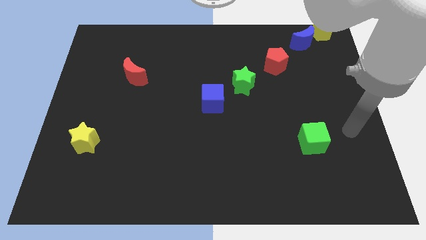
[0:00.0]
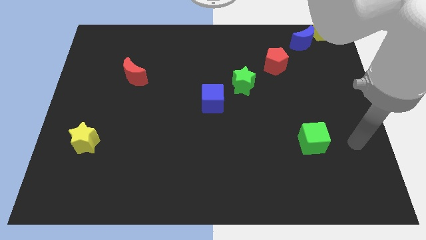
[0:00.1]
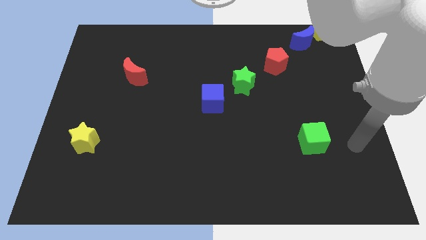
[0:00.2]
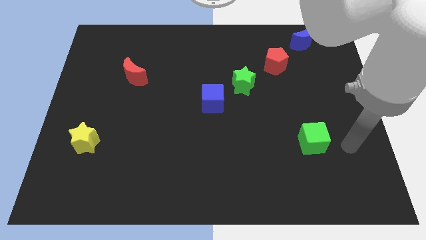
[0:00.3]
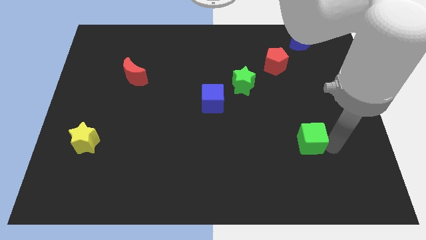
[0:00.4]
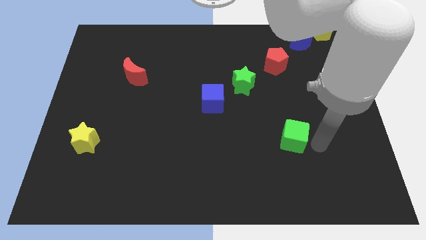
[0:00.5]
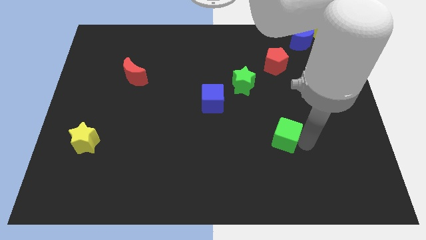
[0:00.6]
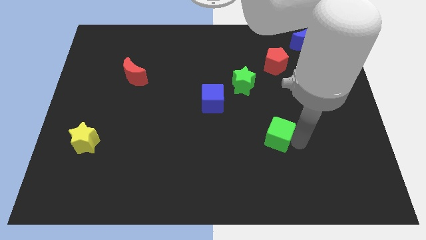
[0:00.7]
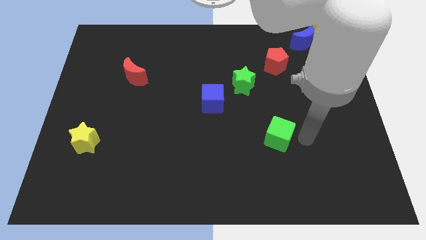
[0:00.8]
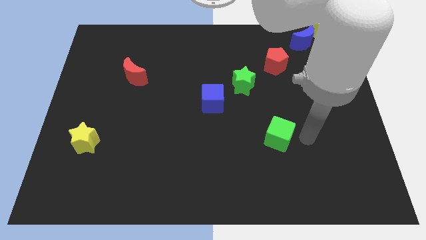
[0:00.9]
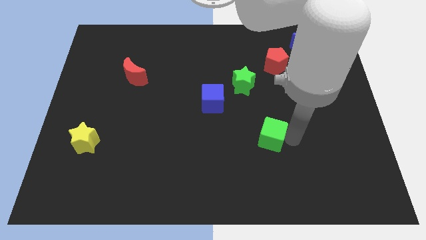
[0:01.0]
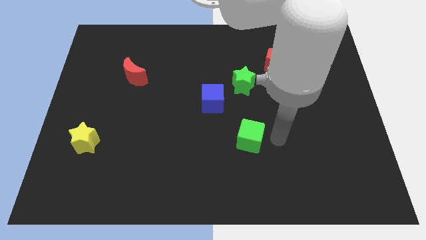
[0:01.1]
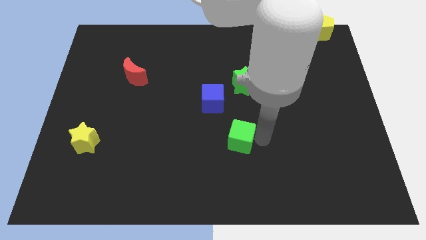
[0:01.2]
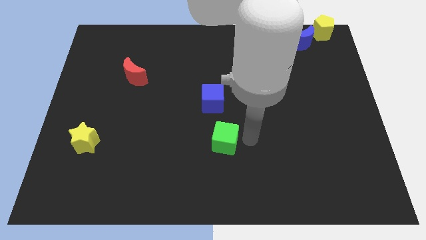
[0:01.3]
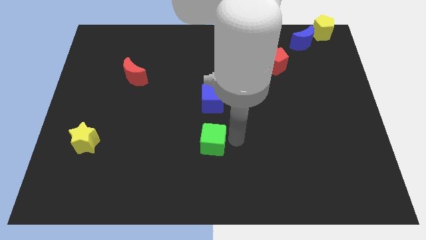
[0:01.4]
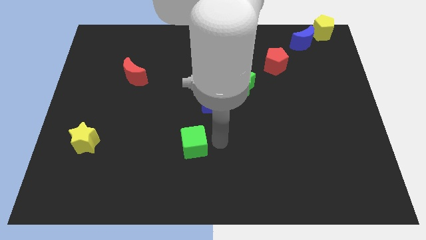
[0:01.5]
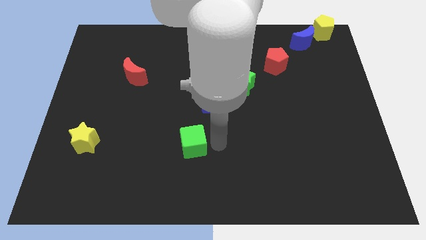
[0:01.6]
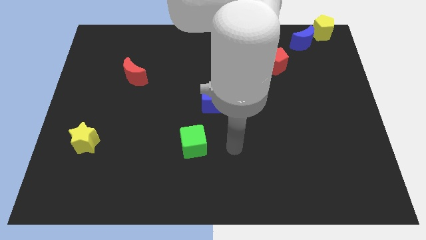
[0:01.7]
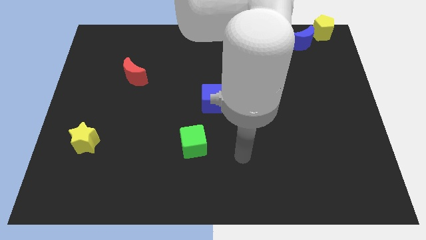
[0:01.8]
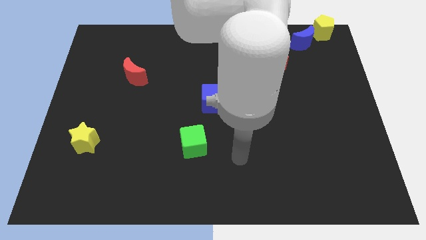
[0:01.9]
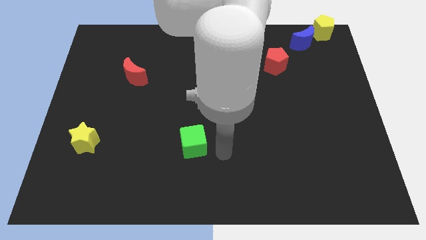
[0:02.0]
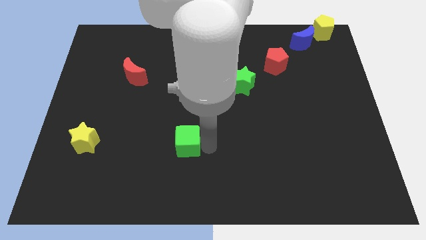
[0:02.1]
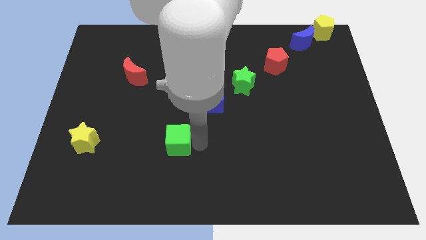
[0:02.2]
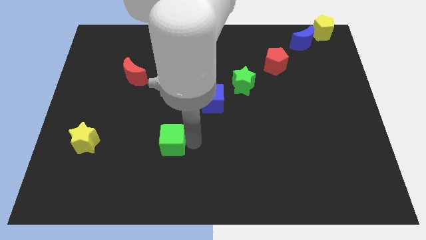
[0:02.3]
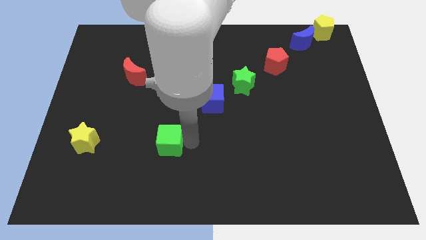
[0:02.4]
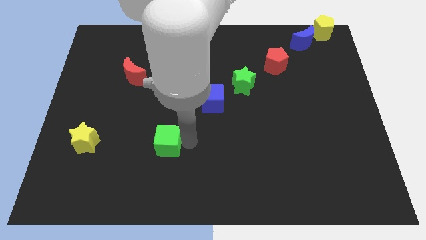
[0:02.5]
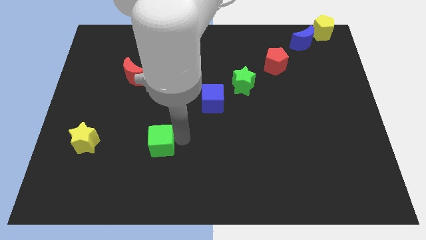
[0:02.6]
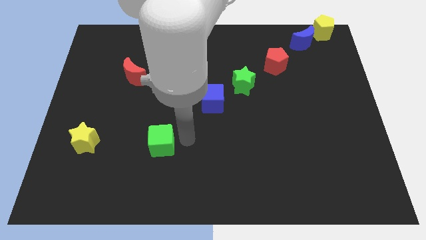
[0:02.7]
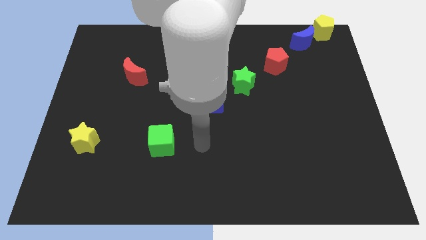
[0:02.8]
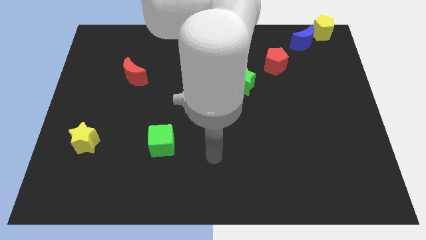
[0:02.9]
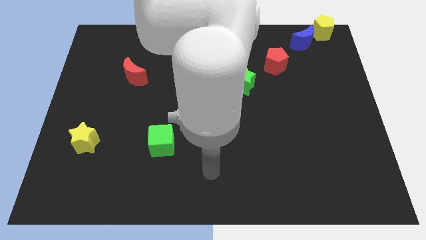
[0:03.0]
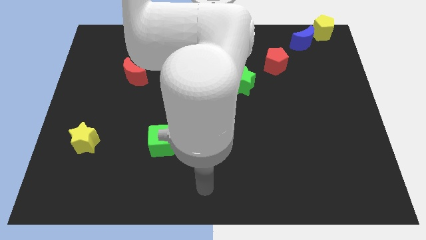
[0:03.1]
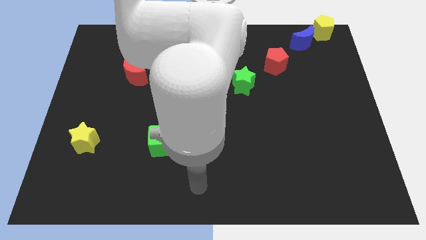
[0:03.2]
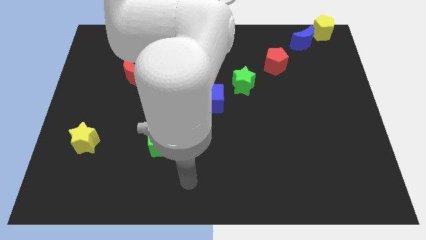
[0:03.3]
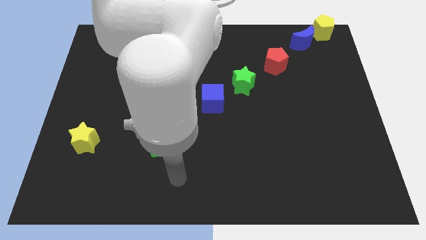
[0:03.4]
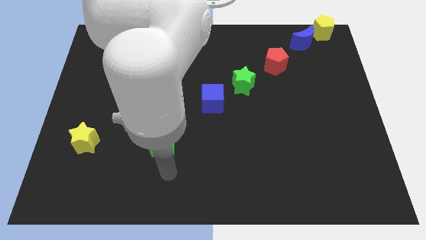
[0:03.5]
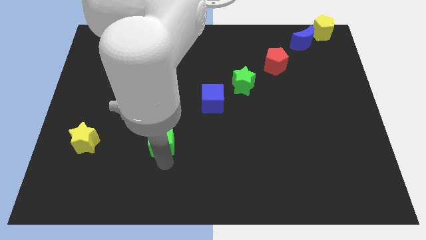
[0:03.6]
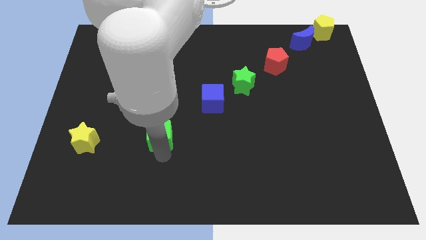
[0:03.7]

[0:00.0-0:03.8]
move the green cube to the center left

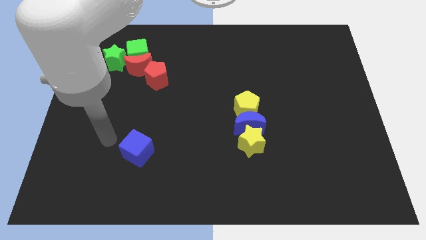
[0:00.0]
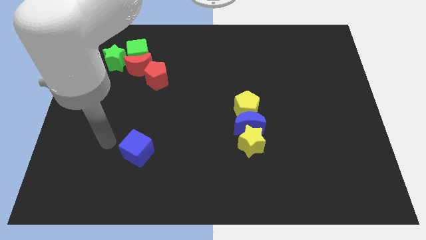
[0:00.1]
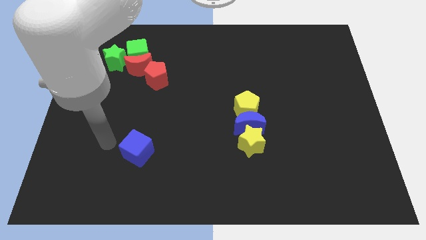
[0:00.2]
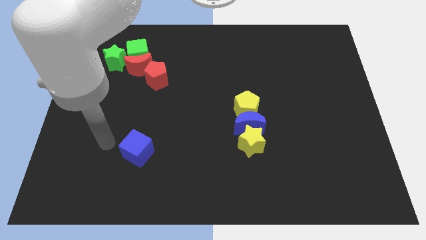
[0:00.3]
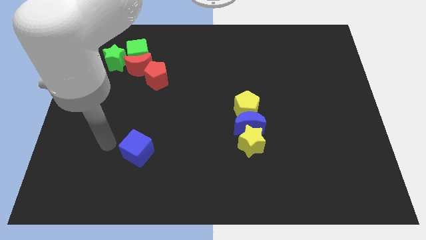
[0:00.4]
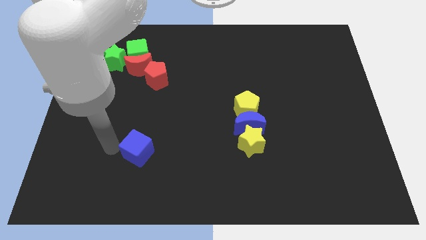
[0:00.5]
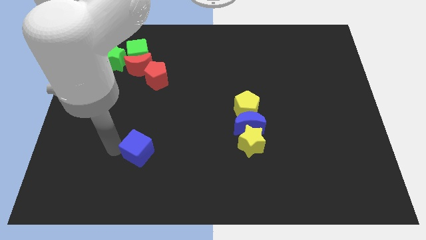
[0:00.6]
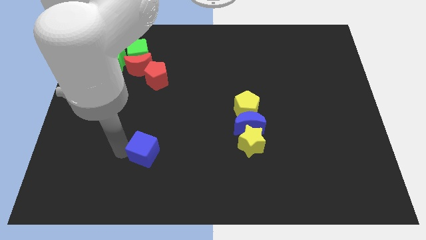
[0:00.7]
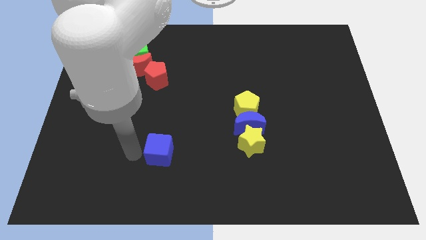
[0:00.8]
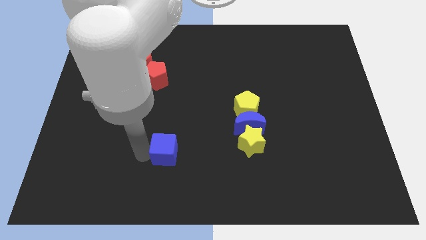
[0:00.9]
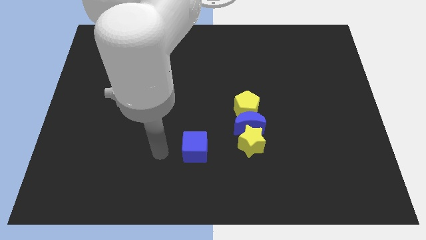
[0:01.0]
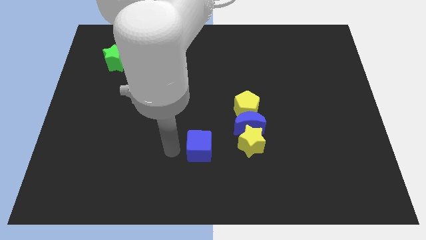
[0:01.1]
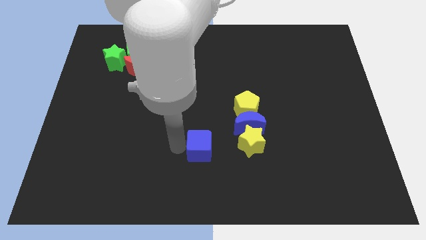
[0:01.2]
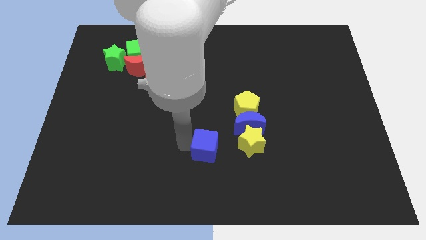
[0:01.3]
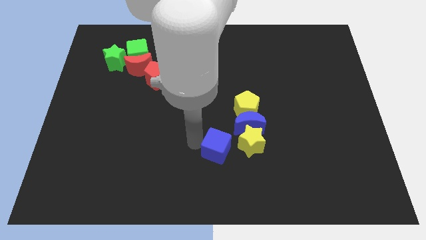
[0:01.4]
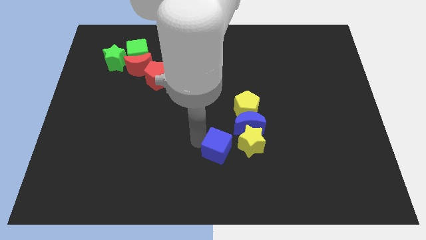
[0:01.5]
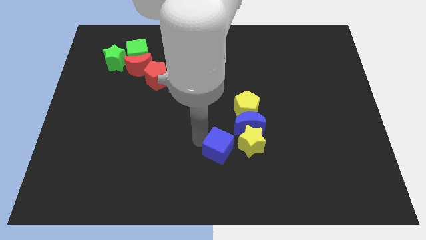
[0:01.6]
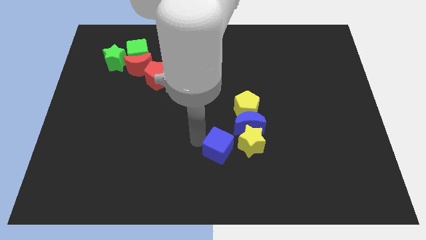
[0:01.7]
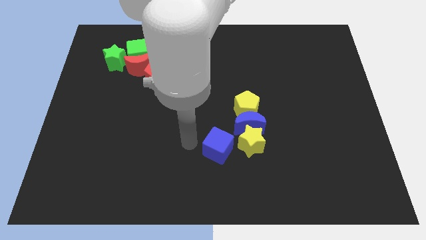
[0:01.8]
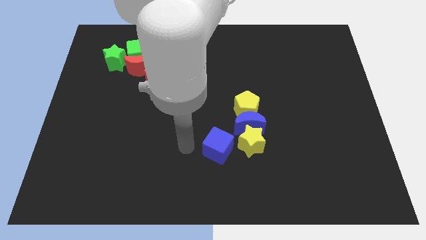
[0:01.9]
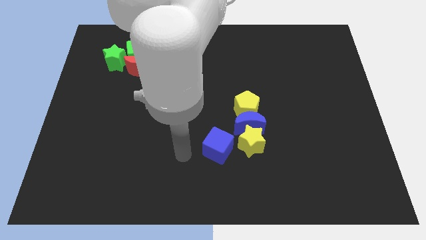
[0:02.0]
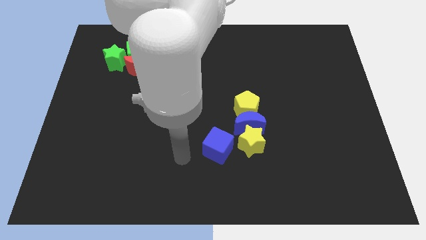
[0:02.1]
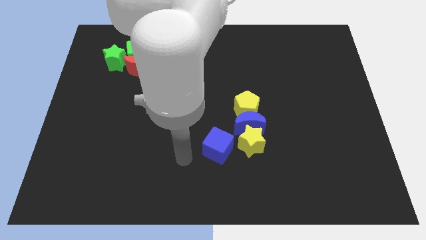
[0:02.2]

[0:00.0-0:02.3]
move blue cube close to the yellow star

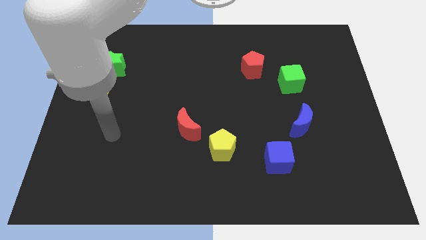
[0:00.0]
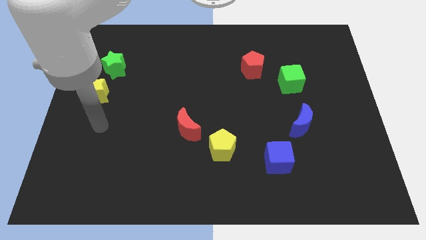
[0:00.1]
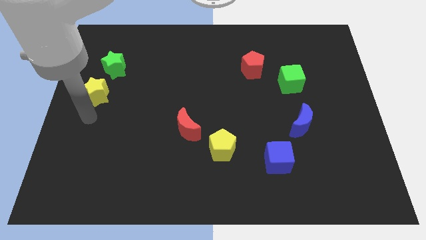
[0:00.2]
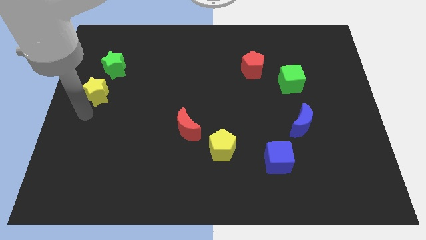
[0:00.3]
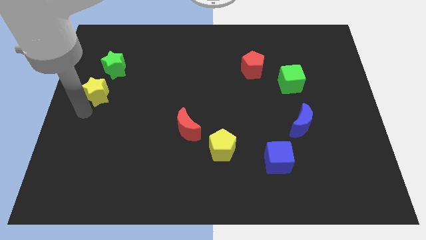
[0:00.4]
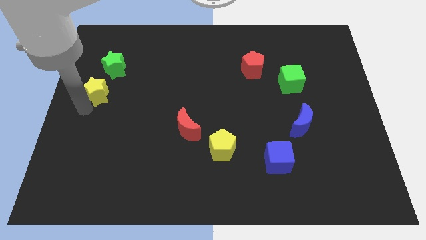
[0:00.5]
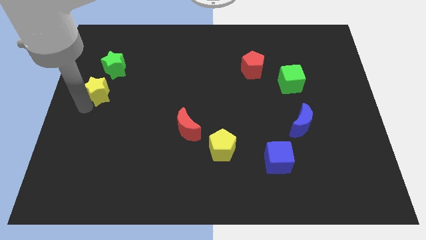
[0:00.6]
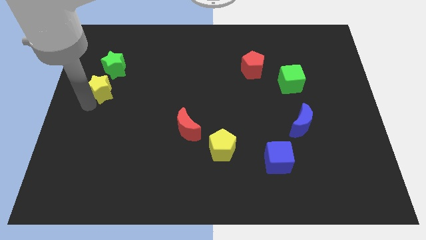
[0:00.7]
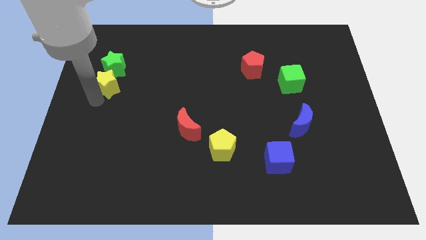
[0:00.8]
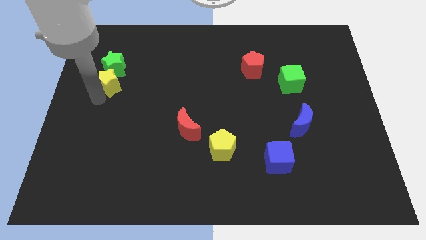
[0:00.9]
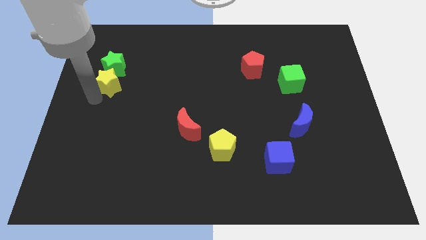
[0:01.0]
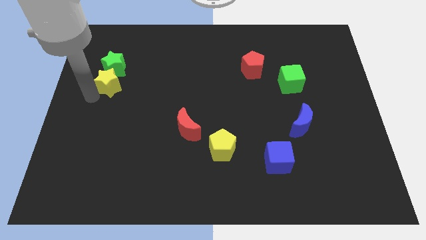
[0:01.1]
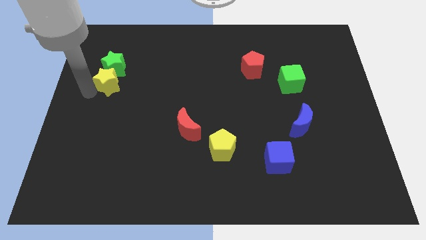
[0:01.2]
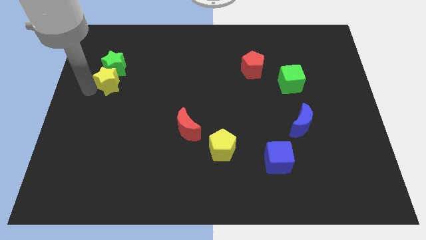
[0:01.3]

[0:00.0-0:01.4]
push the yellow star to the bottom side of the green star

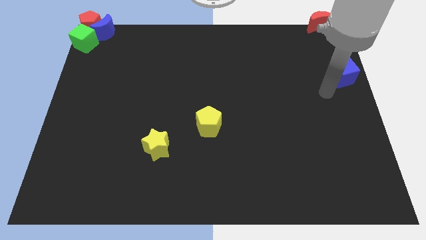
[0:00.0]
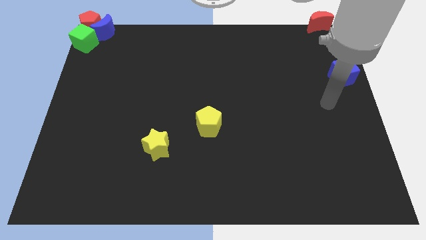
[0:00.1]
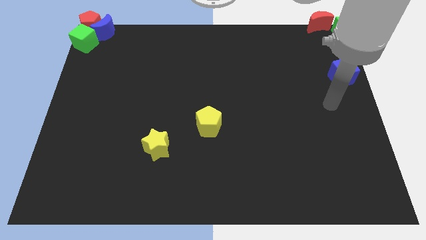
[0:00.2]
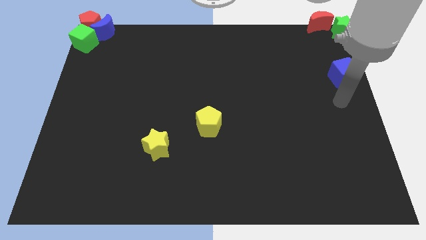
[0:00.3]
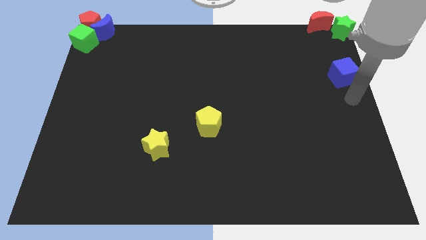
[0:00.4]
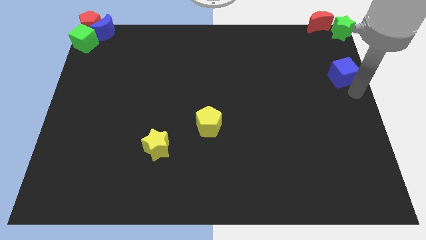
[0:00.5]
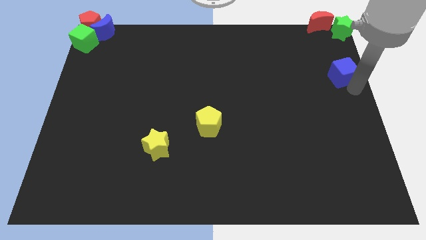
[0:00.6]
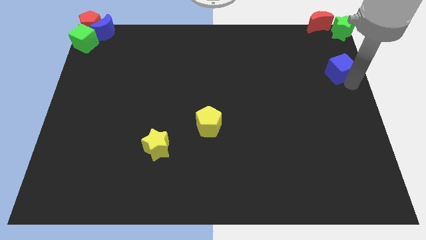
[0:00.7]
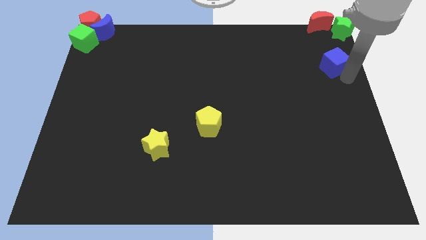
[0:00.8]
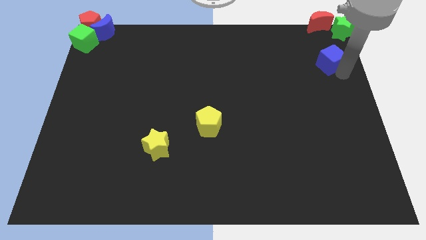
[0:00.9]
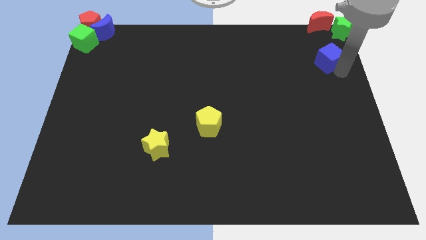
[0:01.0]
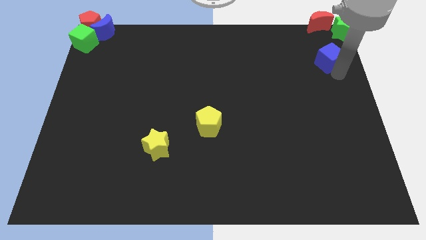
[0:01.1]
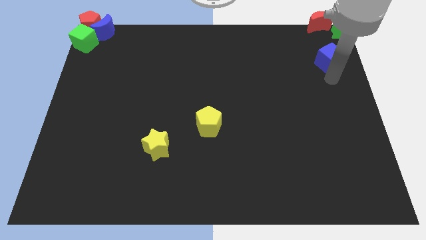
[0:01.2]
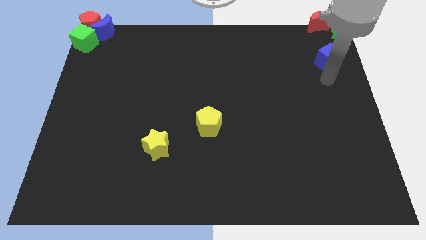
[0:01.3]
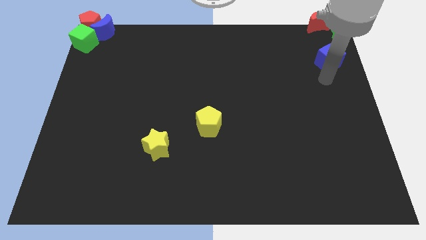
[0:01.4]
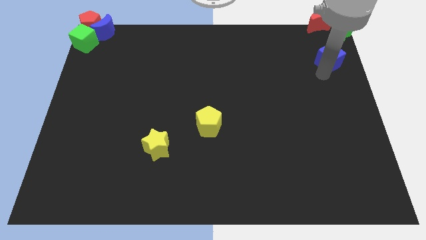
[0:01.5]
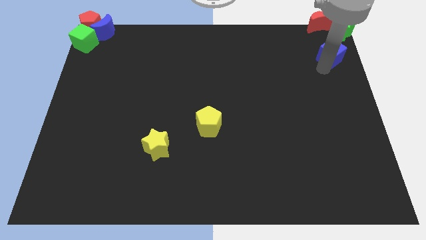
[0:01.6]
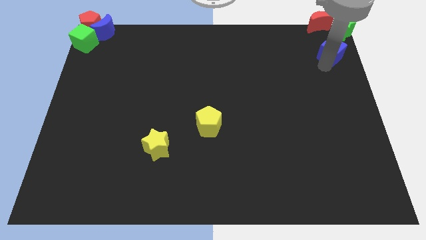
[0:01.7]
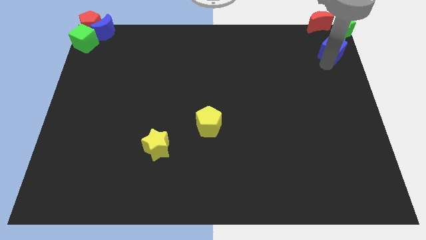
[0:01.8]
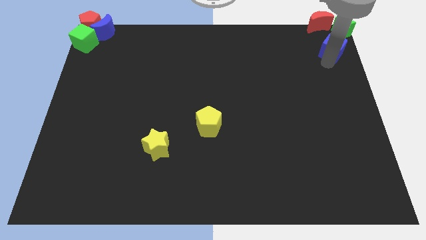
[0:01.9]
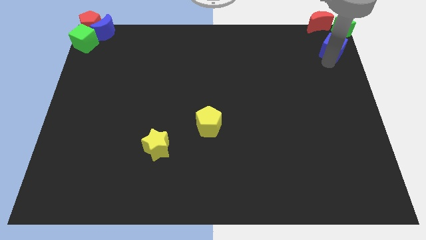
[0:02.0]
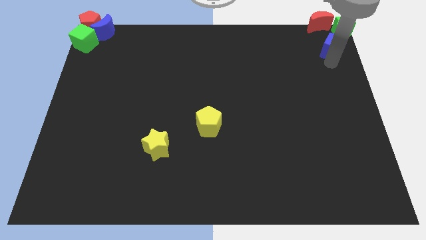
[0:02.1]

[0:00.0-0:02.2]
place the blue cube at the top left of the board
